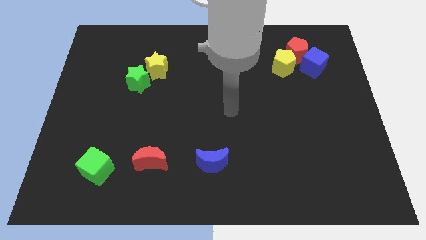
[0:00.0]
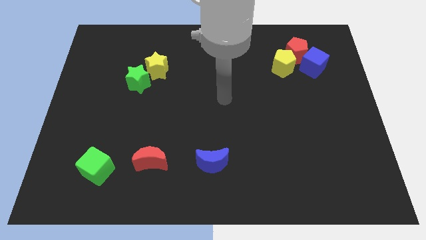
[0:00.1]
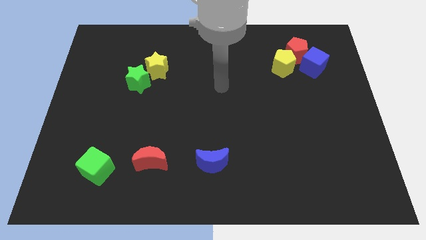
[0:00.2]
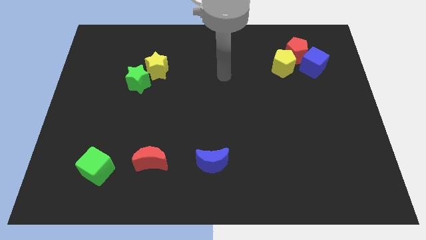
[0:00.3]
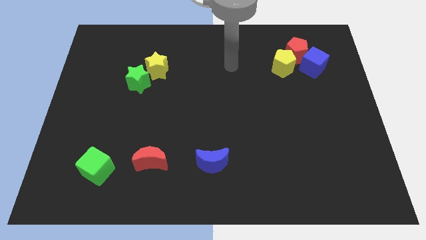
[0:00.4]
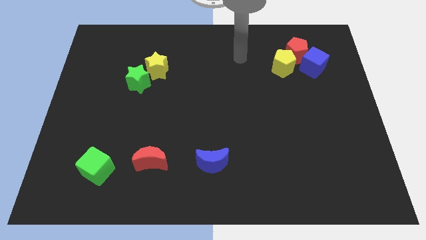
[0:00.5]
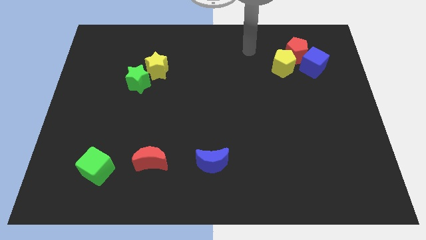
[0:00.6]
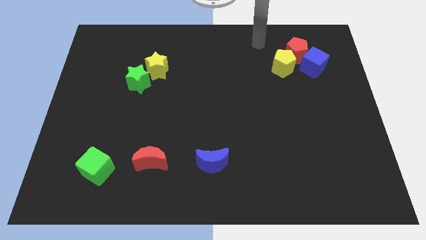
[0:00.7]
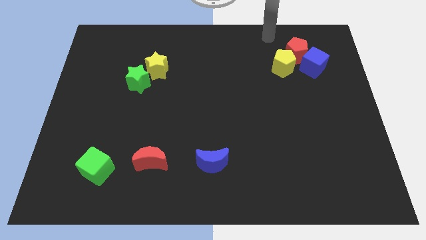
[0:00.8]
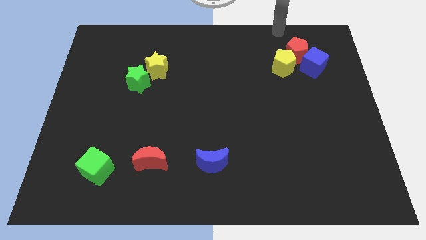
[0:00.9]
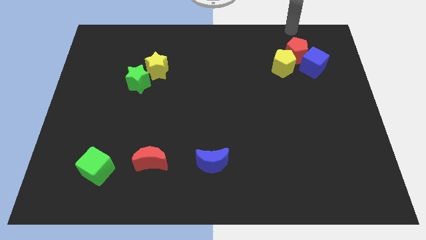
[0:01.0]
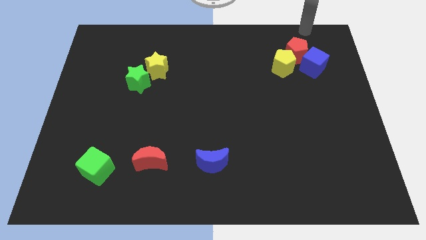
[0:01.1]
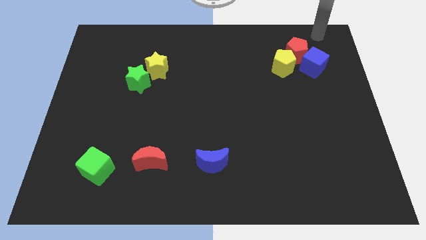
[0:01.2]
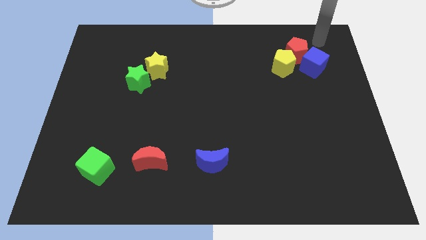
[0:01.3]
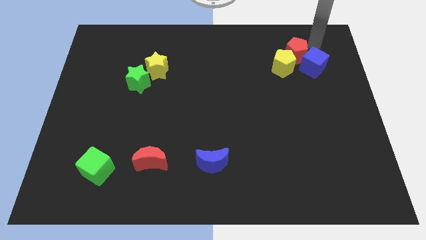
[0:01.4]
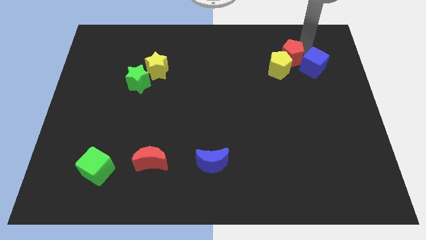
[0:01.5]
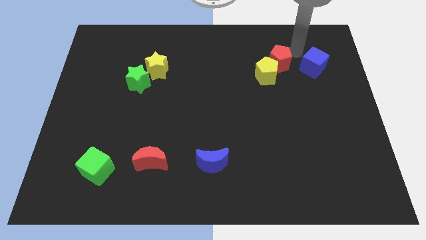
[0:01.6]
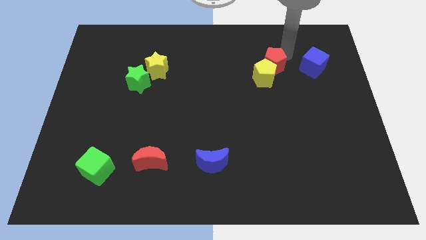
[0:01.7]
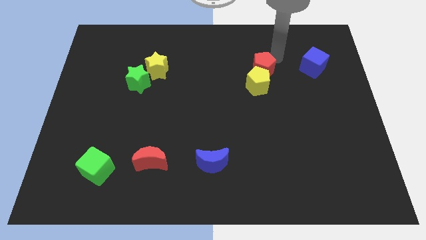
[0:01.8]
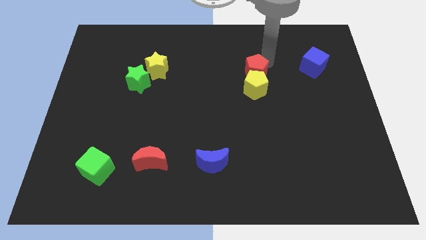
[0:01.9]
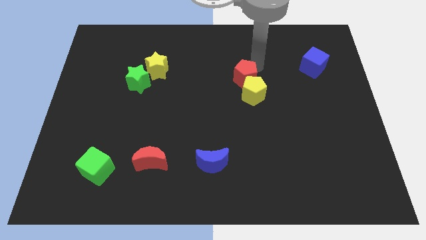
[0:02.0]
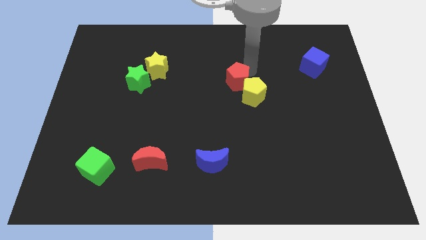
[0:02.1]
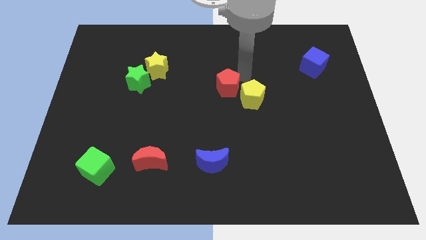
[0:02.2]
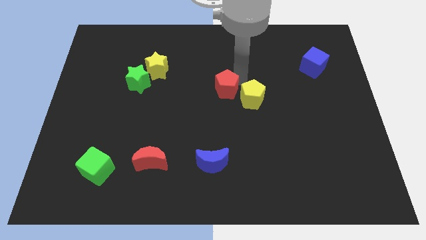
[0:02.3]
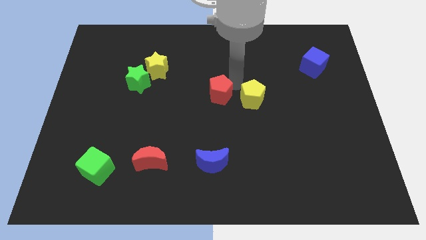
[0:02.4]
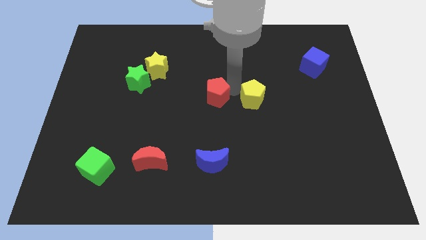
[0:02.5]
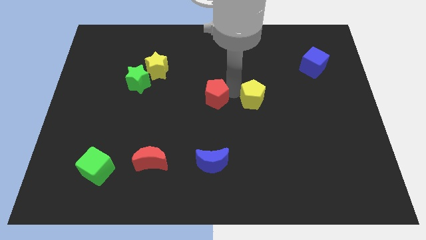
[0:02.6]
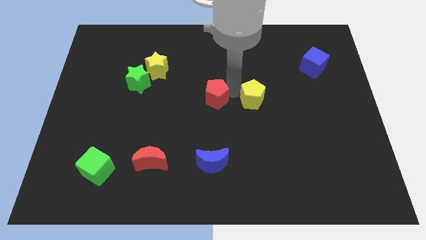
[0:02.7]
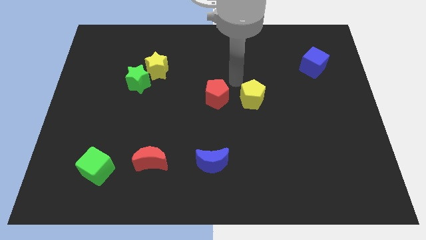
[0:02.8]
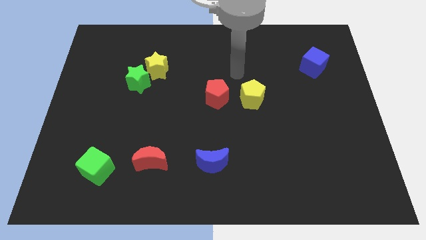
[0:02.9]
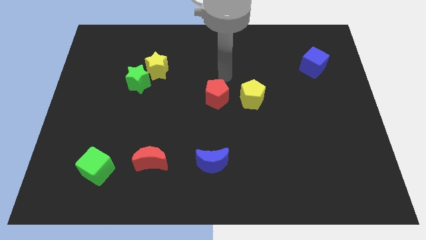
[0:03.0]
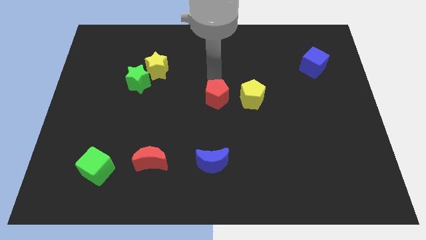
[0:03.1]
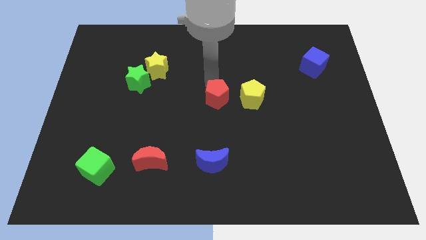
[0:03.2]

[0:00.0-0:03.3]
place the red pentagon at the center of the board

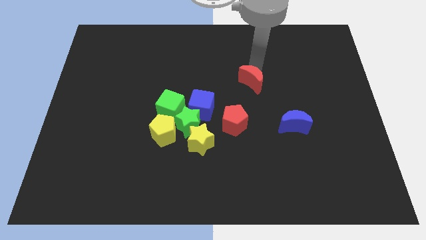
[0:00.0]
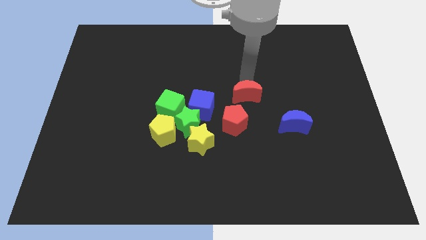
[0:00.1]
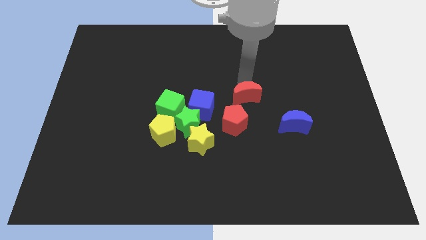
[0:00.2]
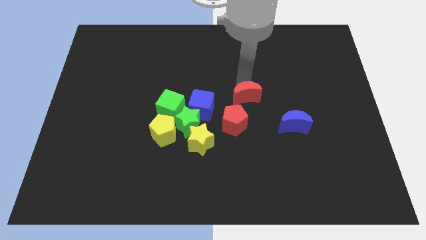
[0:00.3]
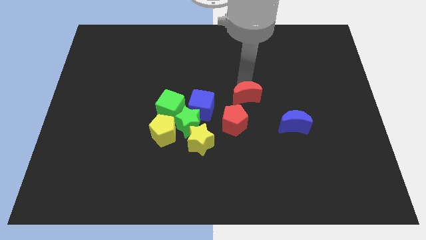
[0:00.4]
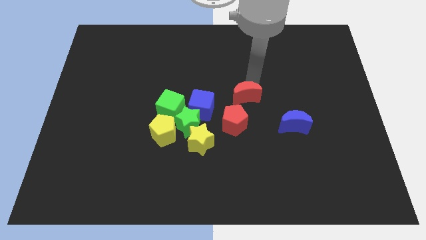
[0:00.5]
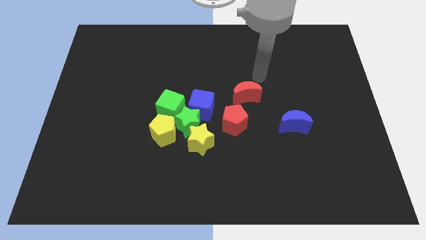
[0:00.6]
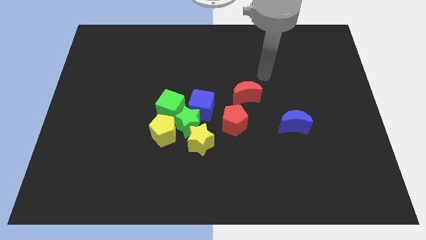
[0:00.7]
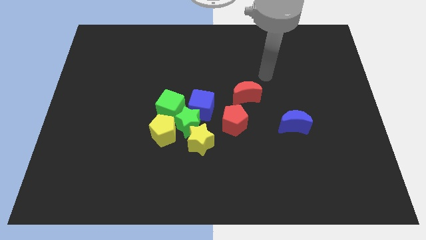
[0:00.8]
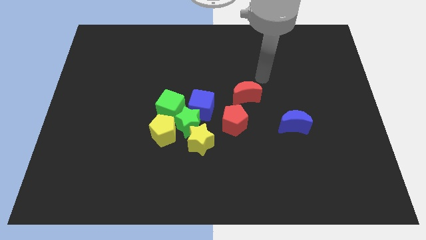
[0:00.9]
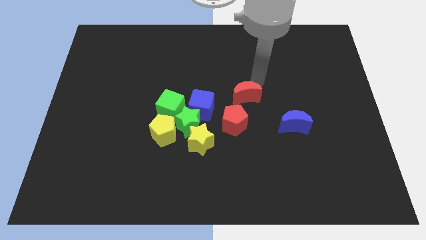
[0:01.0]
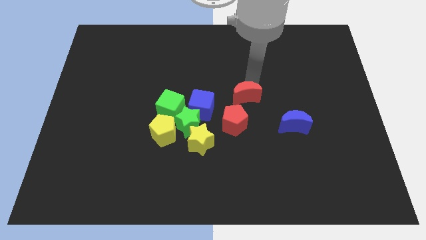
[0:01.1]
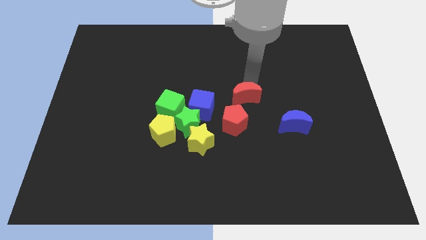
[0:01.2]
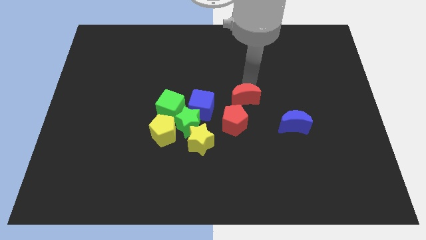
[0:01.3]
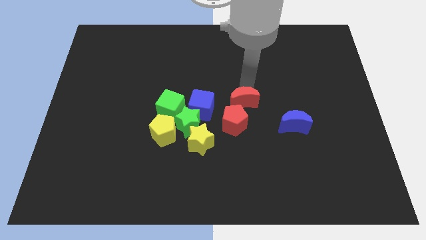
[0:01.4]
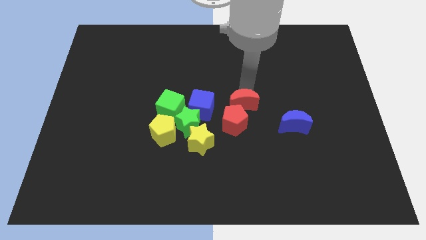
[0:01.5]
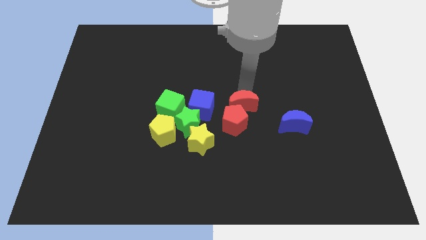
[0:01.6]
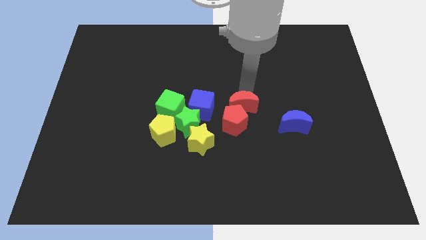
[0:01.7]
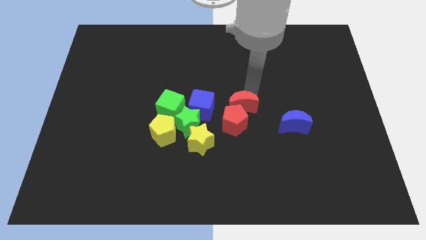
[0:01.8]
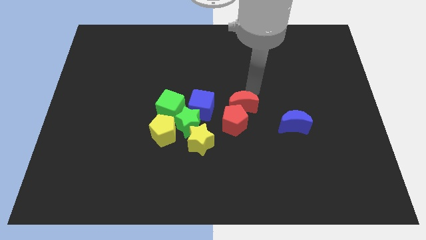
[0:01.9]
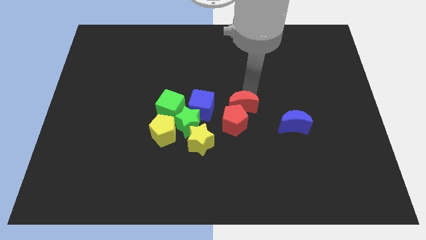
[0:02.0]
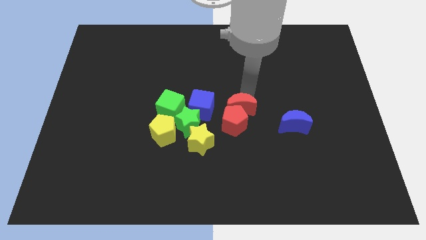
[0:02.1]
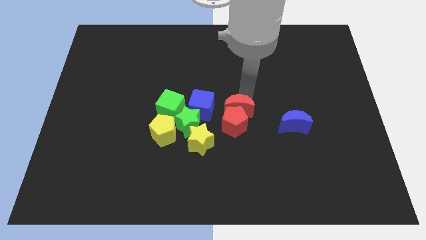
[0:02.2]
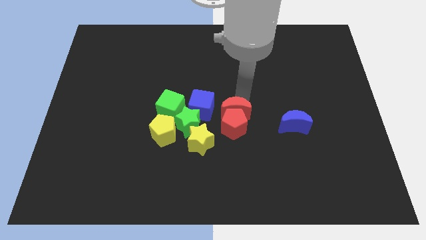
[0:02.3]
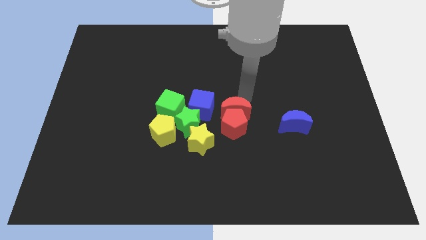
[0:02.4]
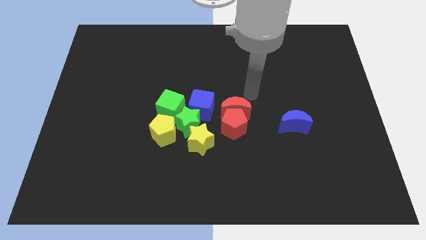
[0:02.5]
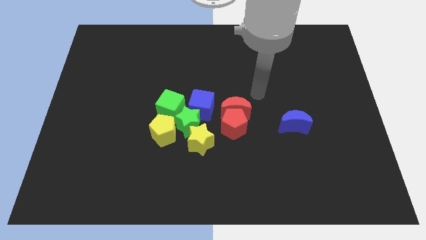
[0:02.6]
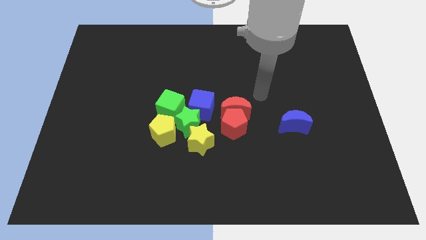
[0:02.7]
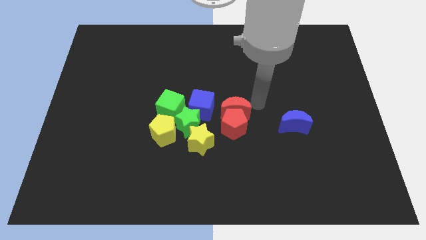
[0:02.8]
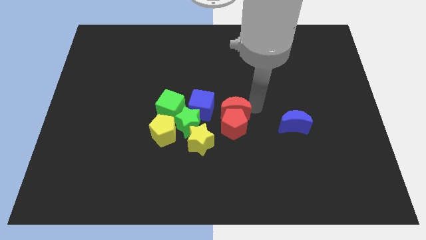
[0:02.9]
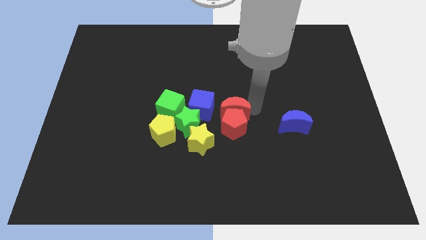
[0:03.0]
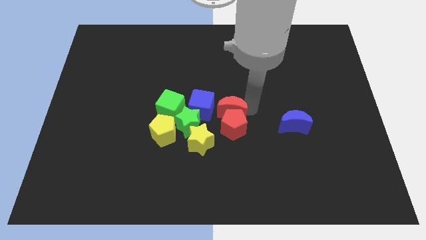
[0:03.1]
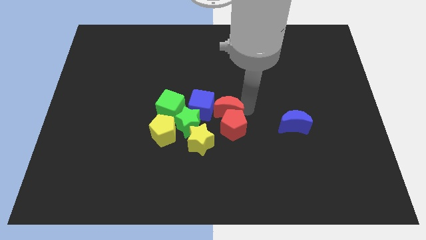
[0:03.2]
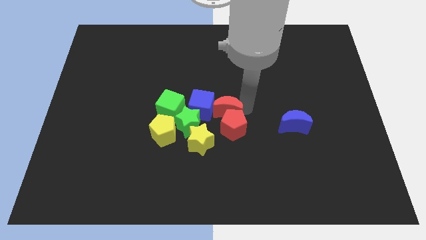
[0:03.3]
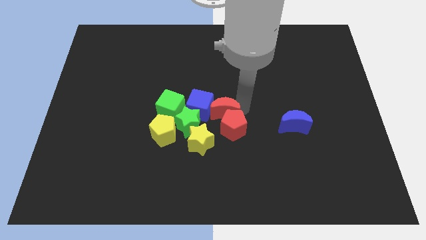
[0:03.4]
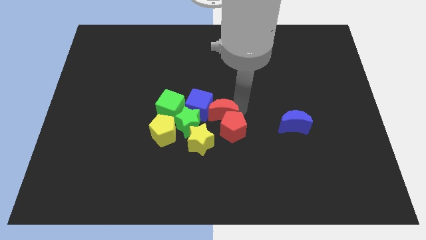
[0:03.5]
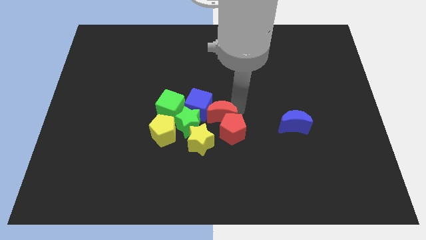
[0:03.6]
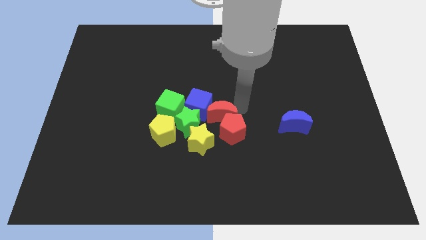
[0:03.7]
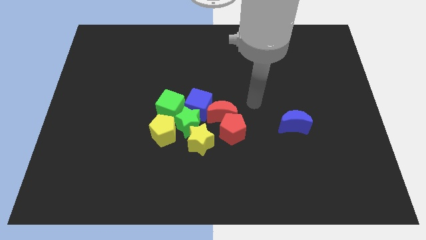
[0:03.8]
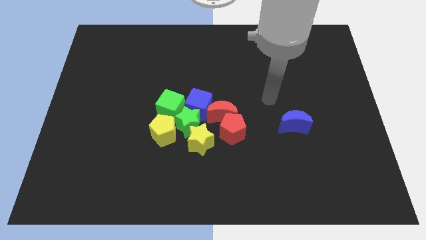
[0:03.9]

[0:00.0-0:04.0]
push the red moon into the red pentagon

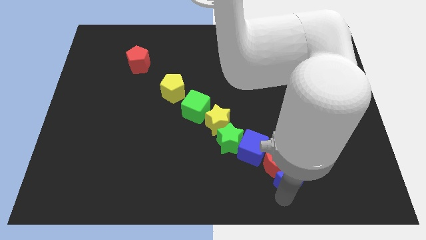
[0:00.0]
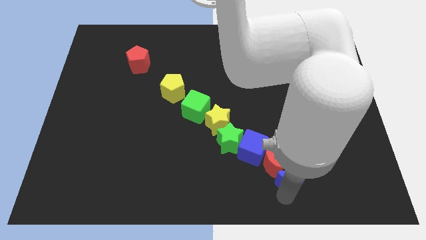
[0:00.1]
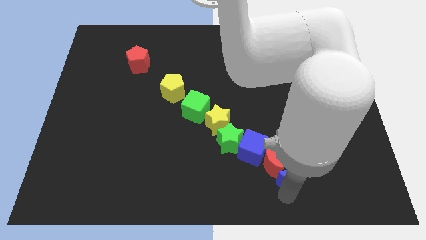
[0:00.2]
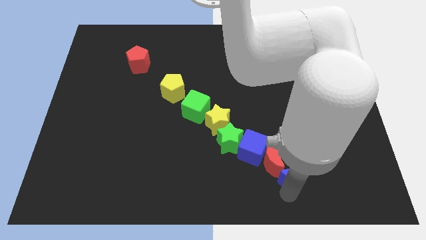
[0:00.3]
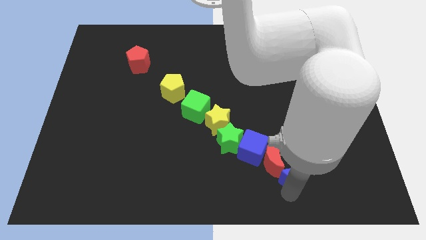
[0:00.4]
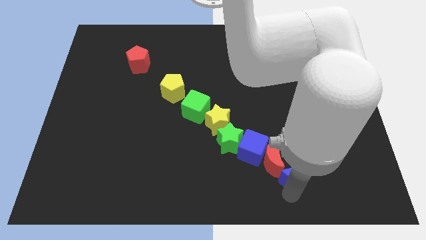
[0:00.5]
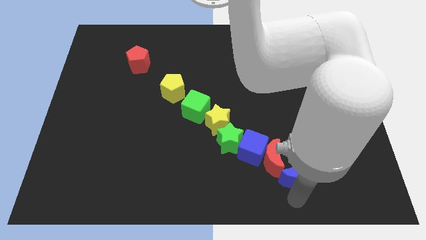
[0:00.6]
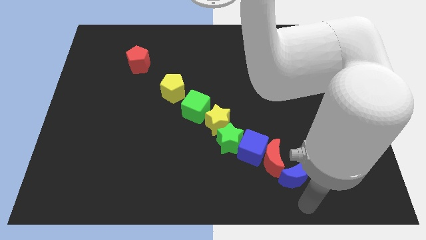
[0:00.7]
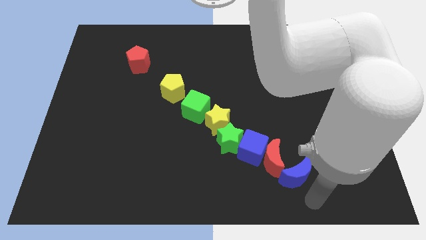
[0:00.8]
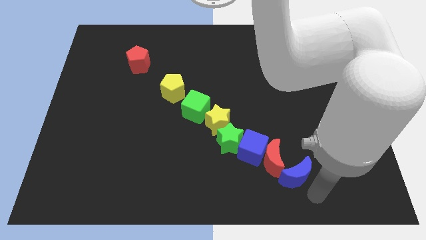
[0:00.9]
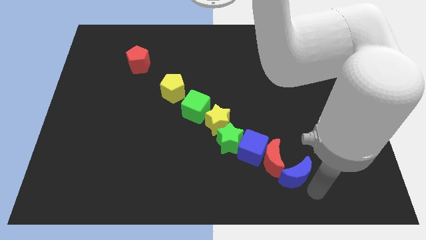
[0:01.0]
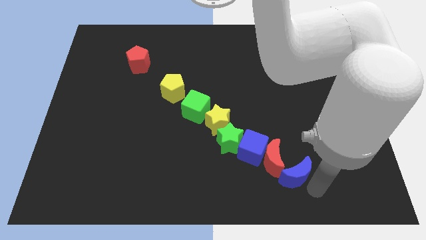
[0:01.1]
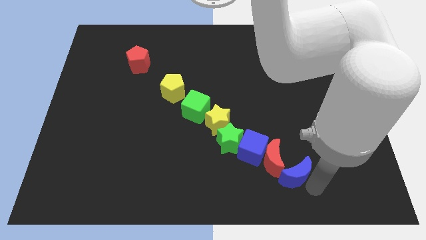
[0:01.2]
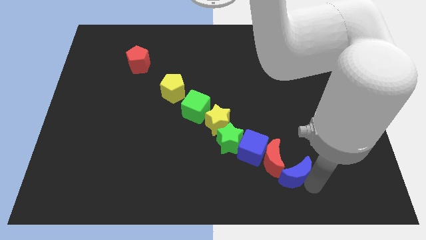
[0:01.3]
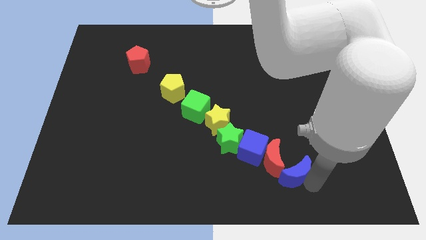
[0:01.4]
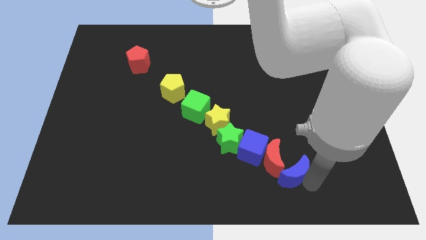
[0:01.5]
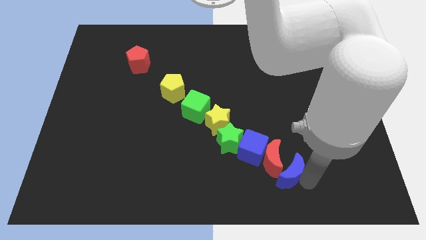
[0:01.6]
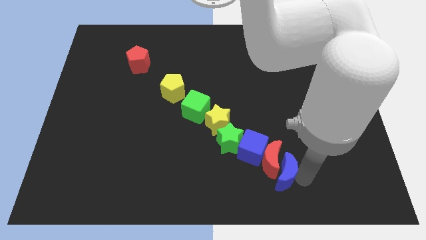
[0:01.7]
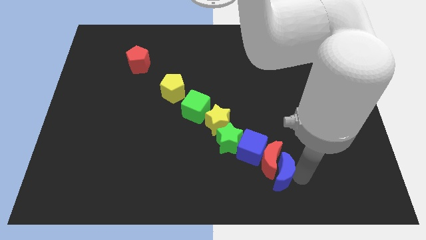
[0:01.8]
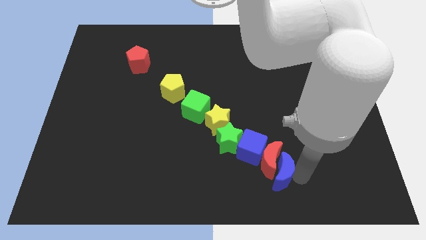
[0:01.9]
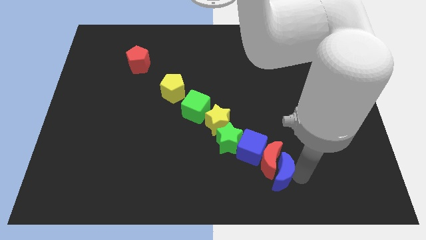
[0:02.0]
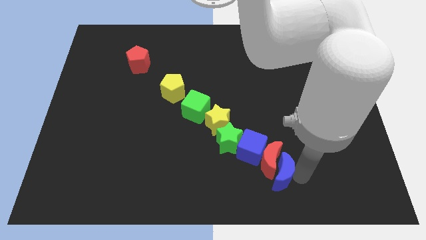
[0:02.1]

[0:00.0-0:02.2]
place the blue moon to the bottom of the red moon
